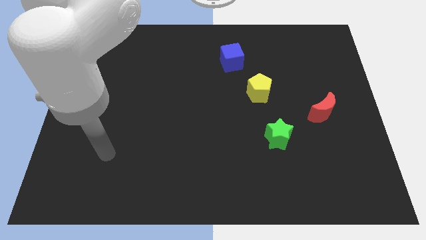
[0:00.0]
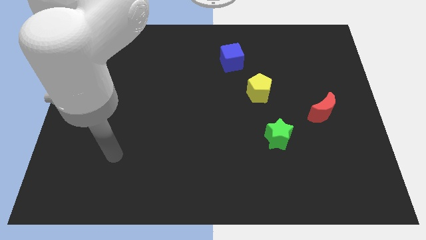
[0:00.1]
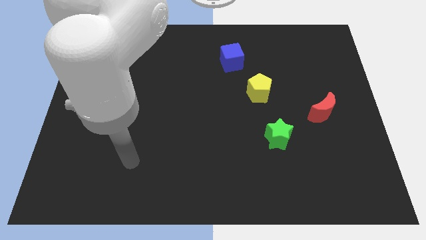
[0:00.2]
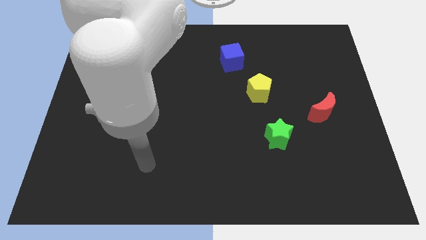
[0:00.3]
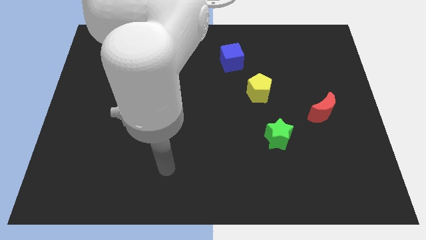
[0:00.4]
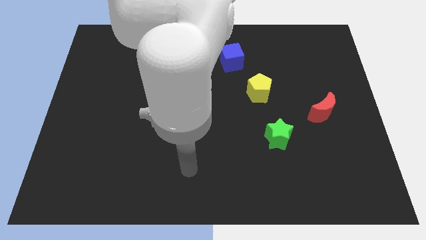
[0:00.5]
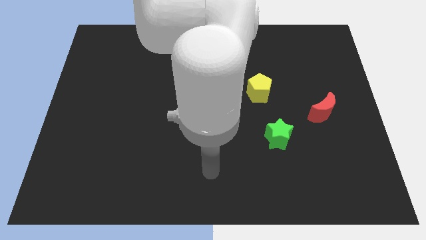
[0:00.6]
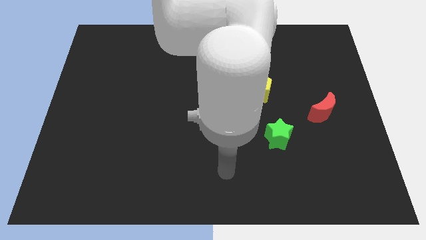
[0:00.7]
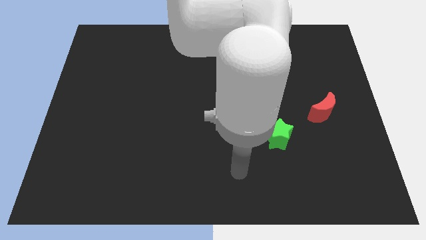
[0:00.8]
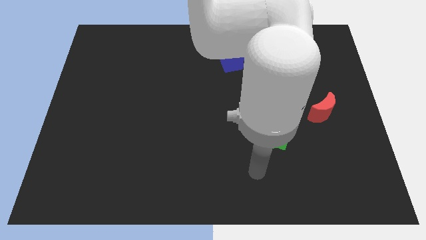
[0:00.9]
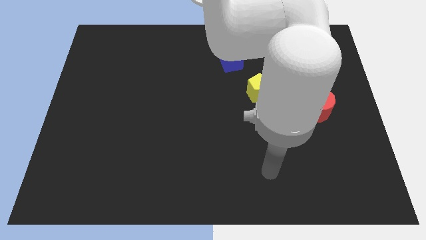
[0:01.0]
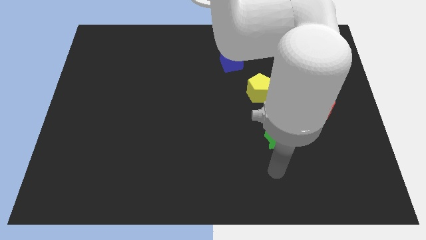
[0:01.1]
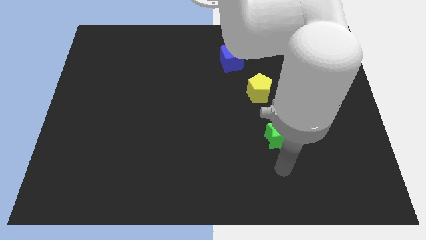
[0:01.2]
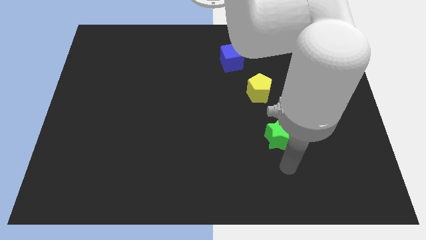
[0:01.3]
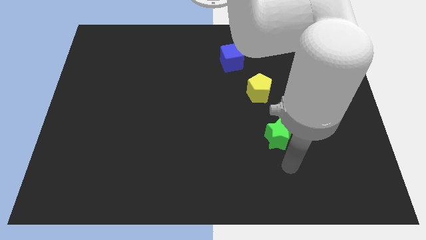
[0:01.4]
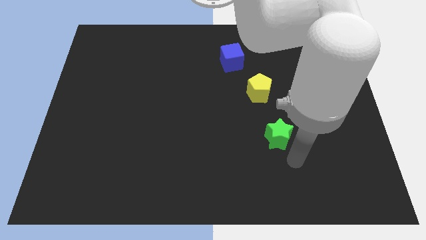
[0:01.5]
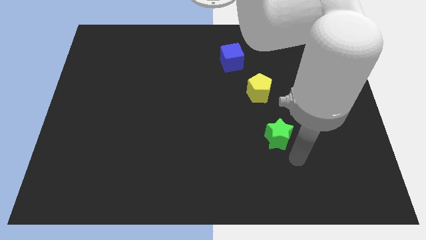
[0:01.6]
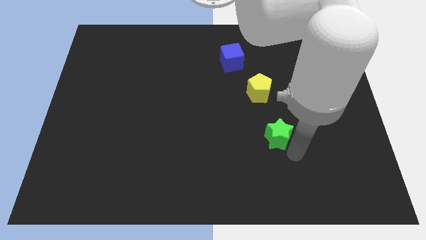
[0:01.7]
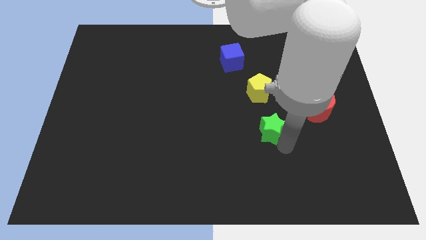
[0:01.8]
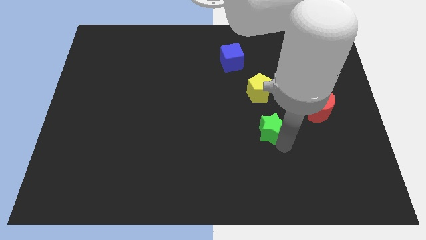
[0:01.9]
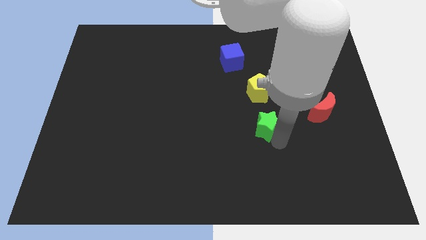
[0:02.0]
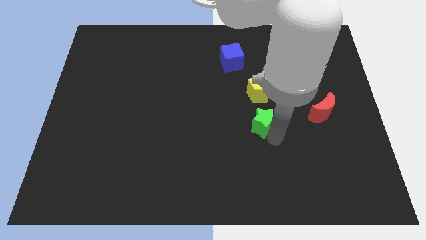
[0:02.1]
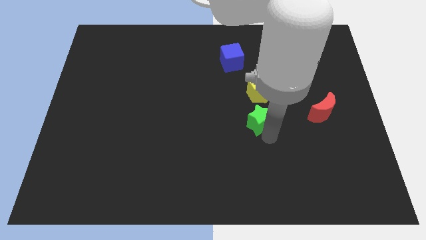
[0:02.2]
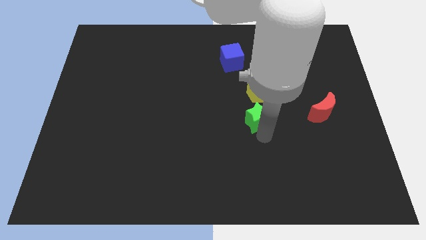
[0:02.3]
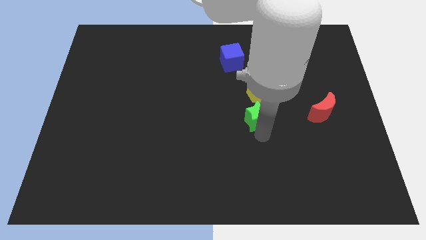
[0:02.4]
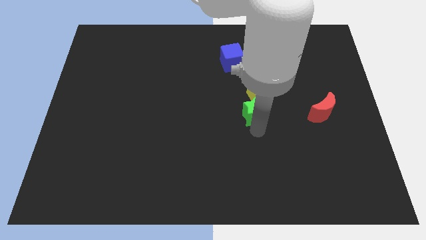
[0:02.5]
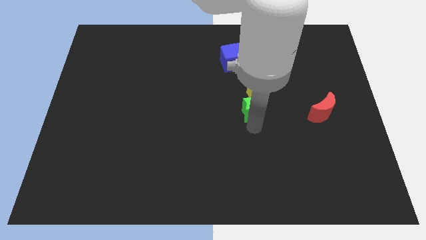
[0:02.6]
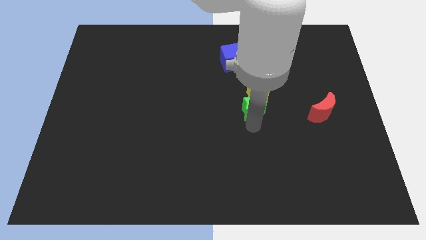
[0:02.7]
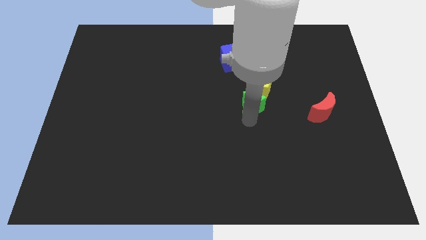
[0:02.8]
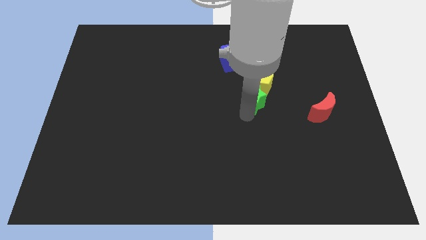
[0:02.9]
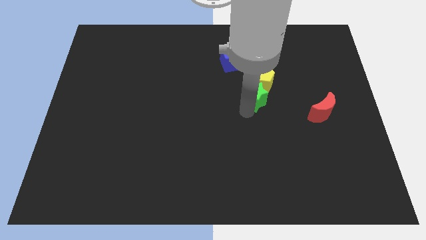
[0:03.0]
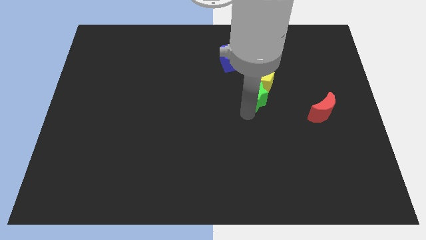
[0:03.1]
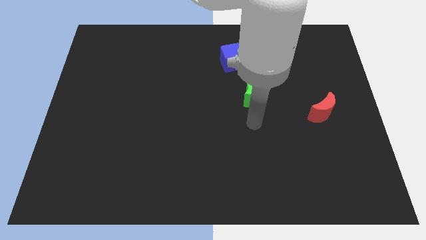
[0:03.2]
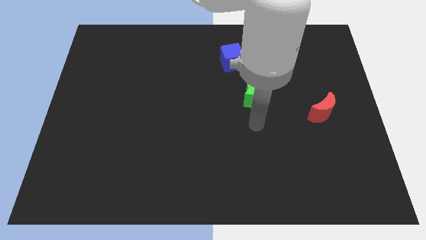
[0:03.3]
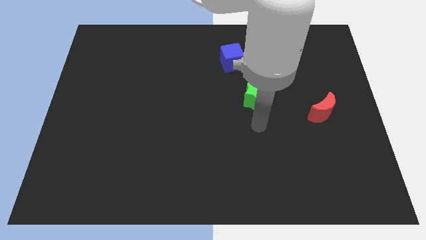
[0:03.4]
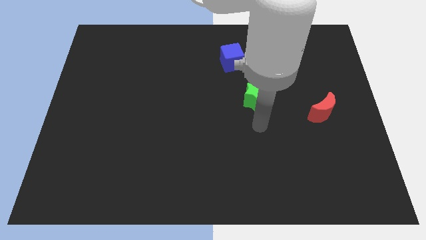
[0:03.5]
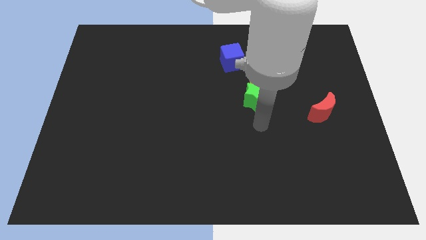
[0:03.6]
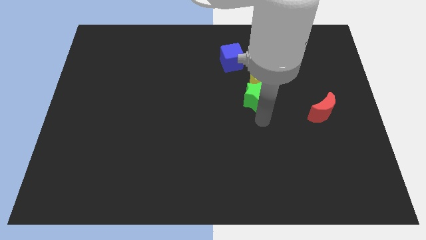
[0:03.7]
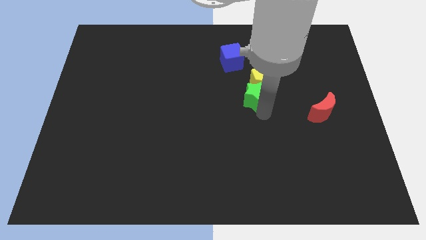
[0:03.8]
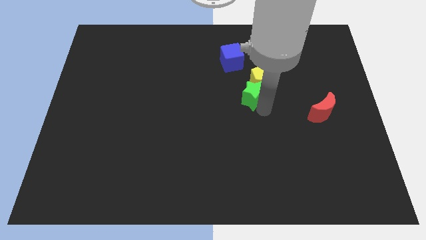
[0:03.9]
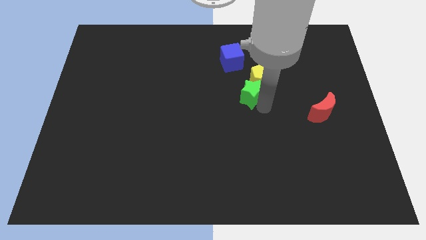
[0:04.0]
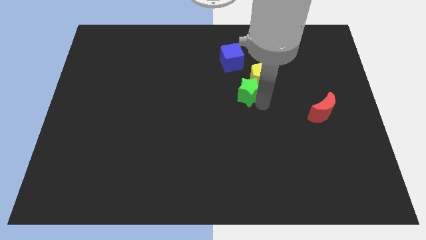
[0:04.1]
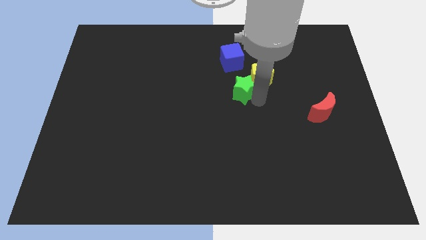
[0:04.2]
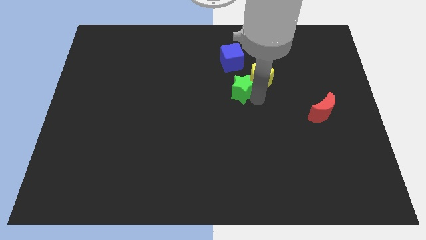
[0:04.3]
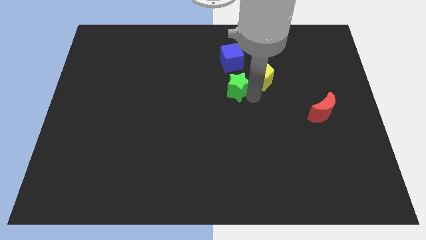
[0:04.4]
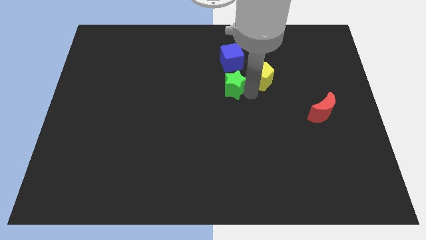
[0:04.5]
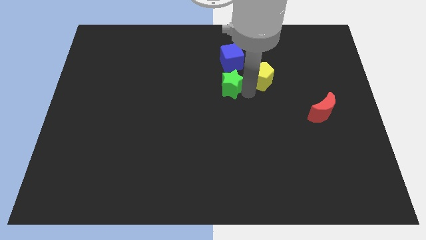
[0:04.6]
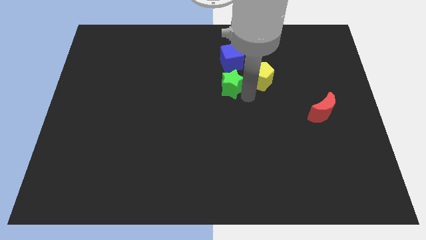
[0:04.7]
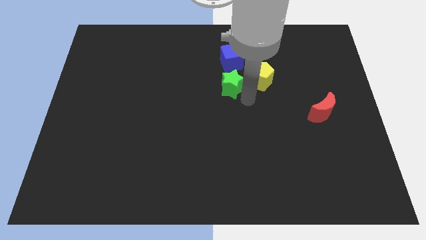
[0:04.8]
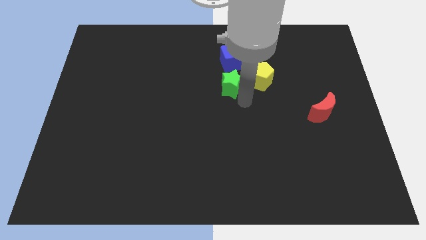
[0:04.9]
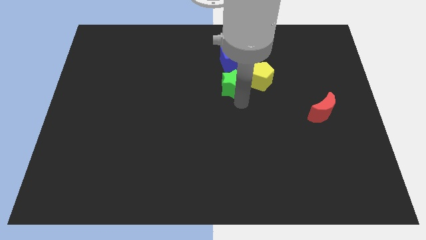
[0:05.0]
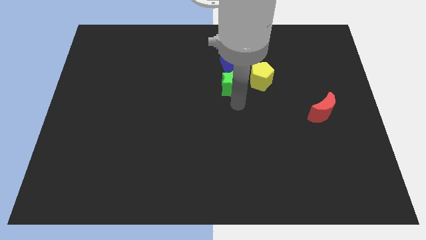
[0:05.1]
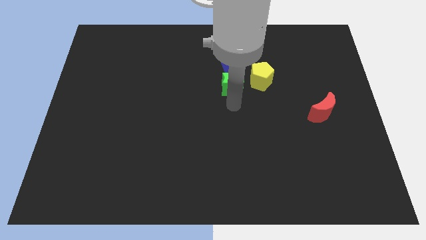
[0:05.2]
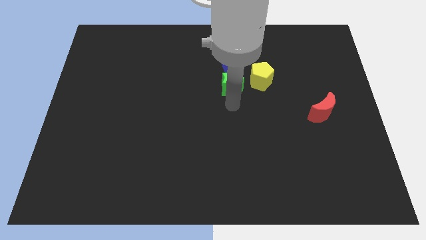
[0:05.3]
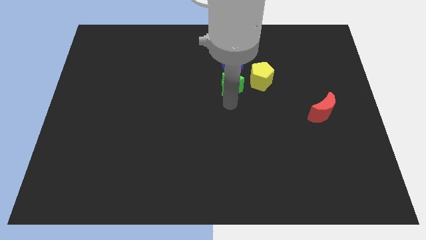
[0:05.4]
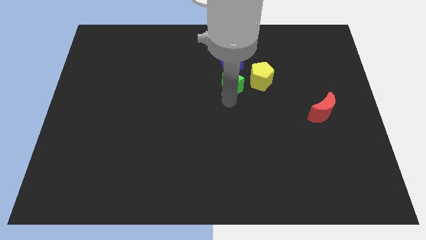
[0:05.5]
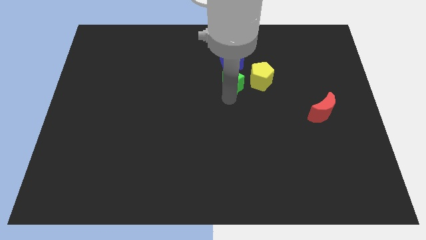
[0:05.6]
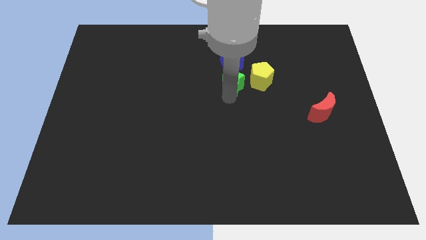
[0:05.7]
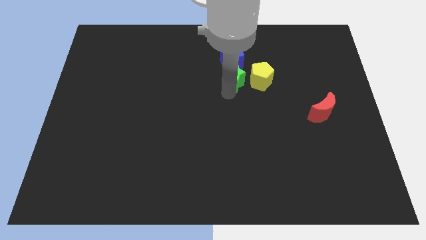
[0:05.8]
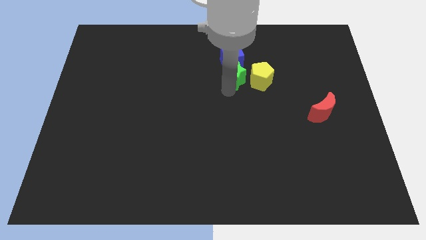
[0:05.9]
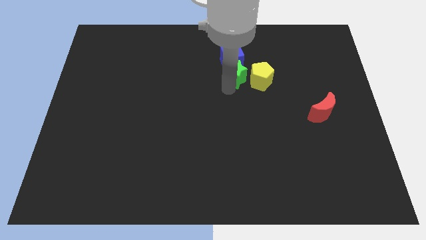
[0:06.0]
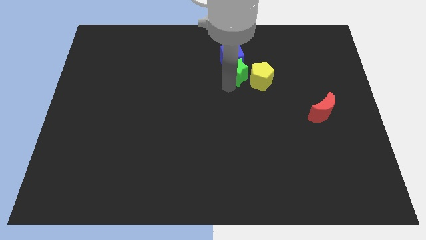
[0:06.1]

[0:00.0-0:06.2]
put the green block close to the blue cube

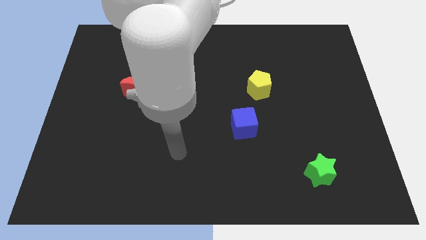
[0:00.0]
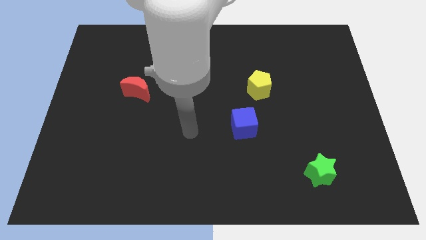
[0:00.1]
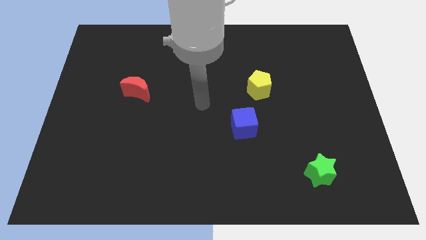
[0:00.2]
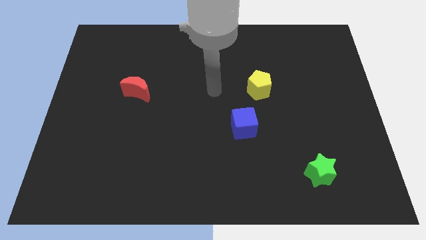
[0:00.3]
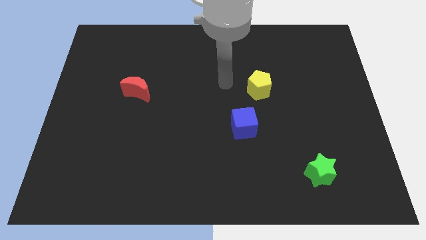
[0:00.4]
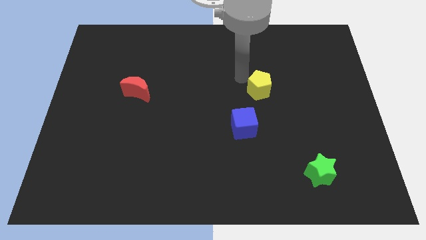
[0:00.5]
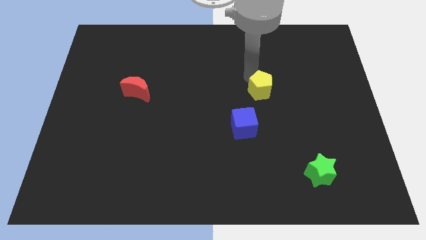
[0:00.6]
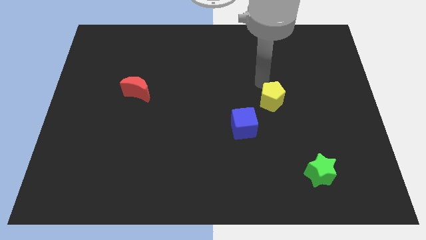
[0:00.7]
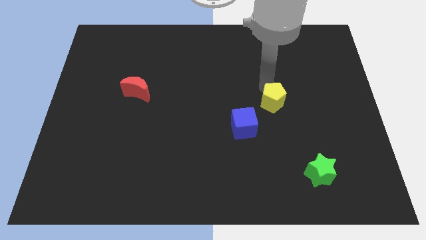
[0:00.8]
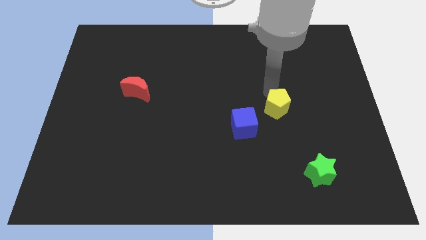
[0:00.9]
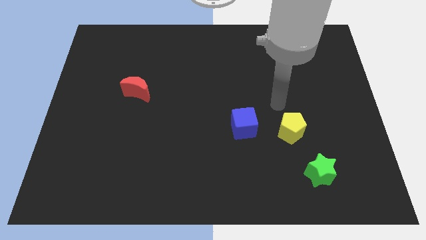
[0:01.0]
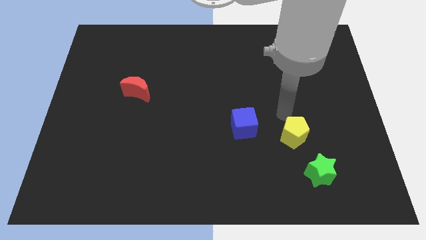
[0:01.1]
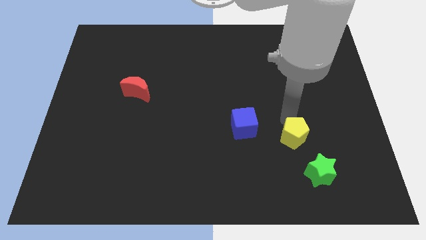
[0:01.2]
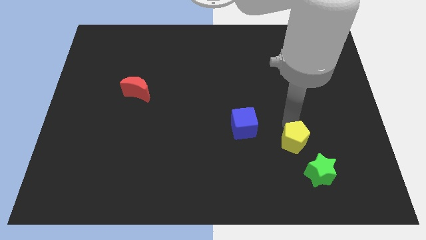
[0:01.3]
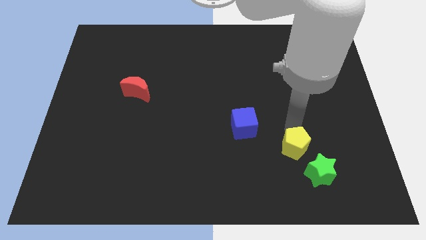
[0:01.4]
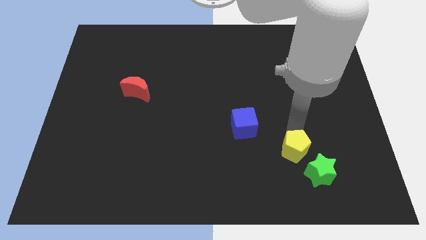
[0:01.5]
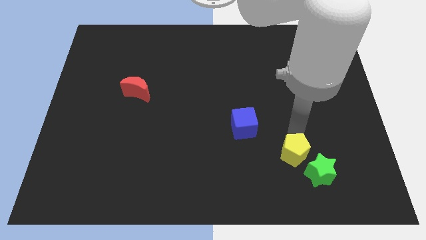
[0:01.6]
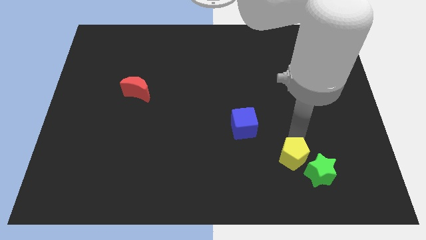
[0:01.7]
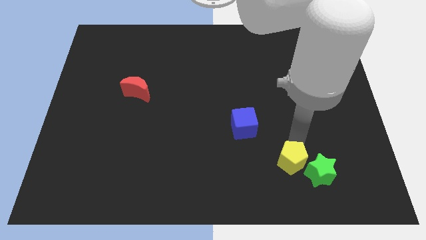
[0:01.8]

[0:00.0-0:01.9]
push the yellow pentagon towards the green star
